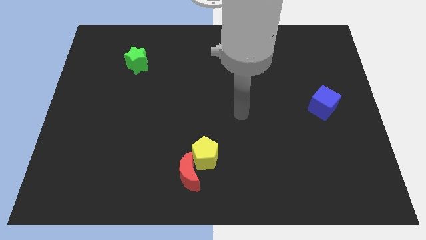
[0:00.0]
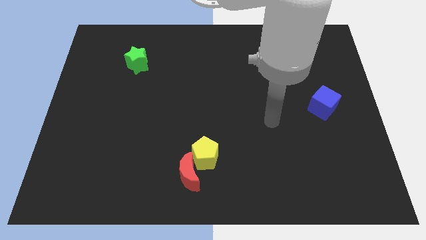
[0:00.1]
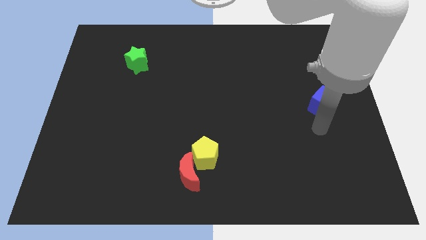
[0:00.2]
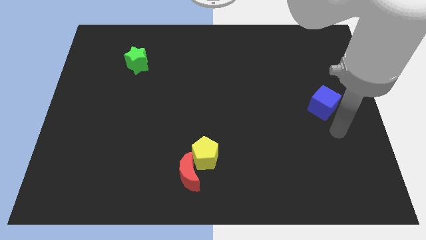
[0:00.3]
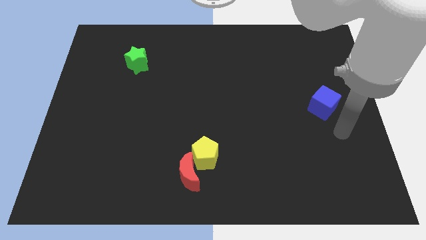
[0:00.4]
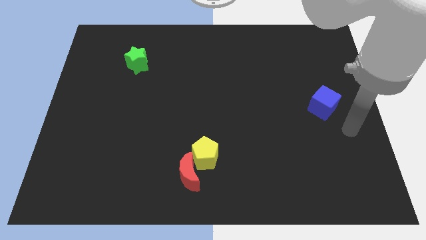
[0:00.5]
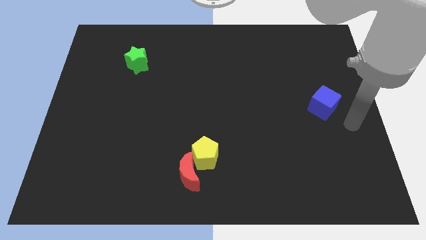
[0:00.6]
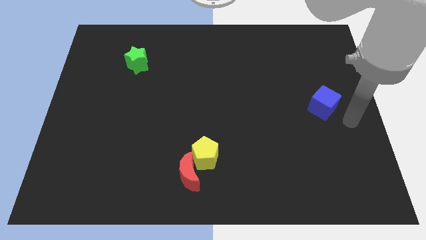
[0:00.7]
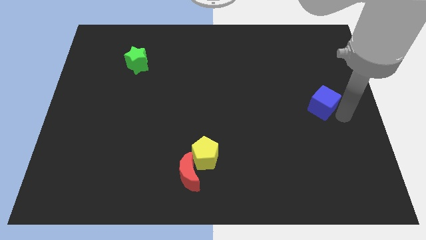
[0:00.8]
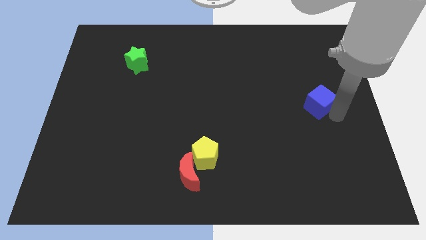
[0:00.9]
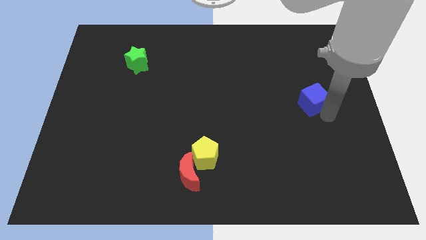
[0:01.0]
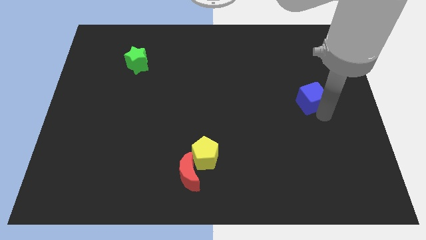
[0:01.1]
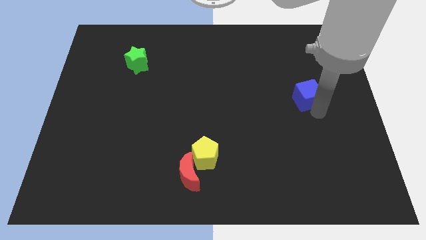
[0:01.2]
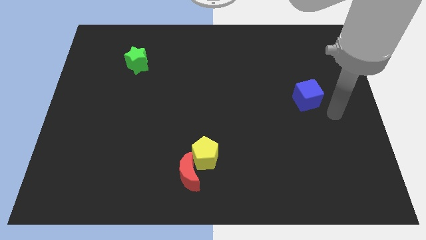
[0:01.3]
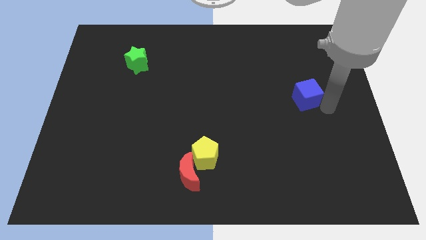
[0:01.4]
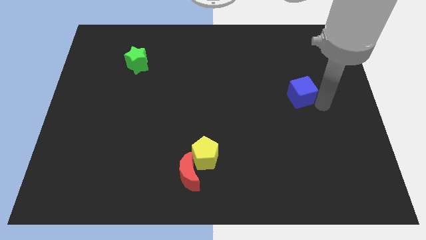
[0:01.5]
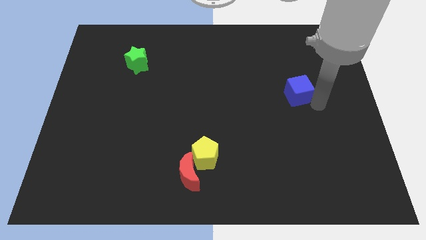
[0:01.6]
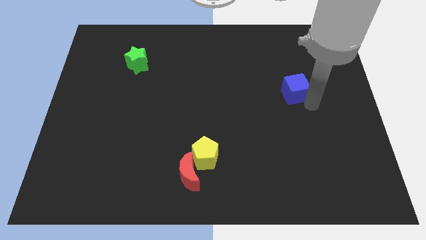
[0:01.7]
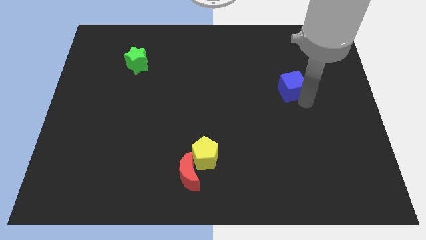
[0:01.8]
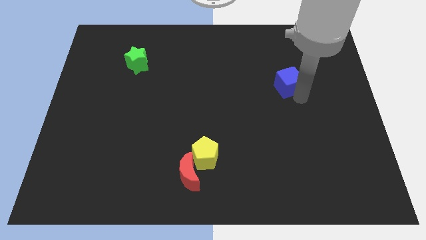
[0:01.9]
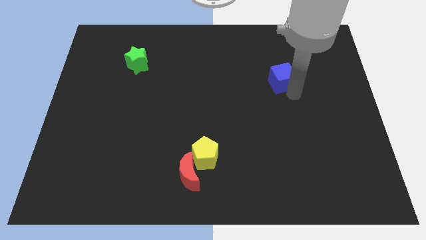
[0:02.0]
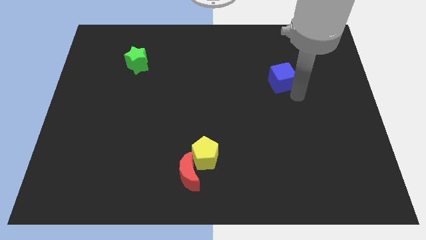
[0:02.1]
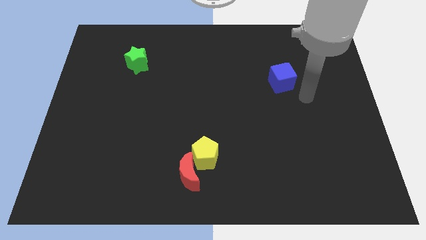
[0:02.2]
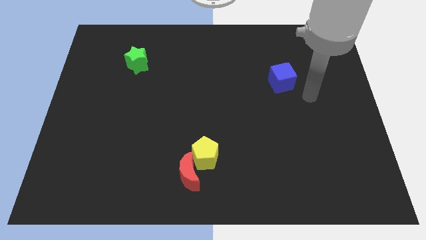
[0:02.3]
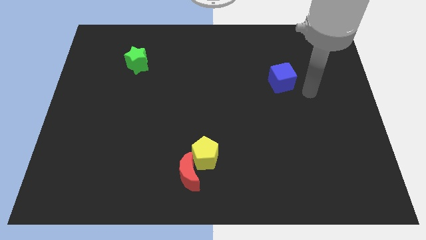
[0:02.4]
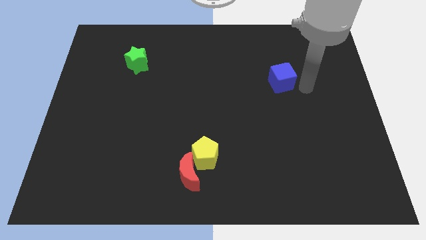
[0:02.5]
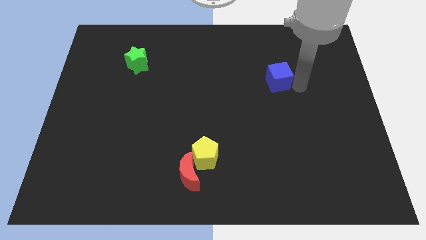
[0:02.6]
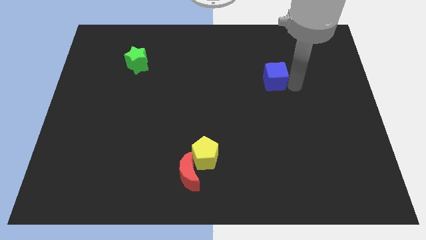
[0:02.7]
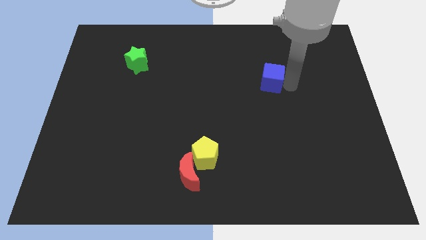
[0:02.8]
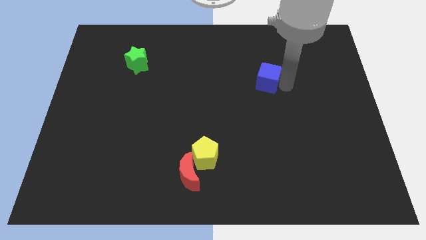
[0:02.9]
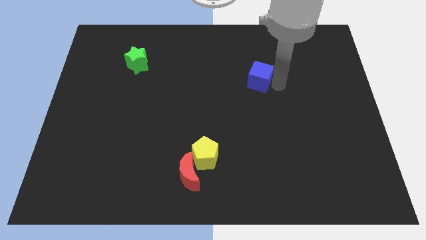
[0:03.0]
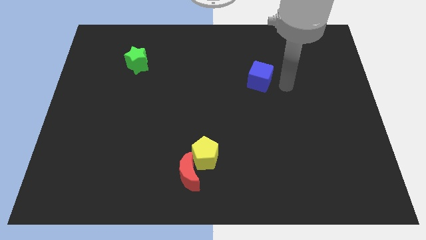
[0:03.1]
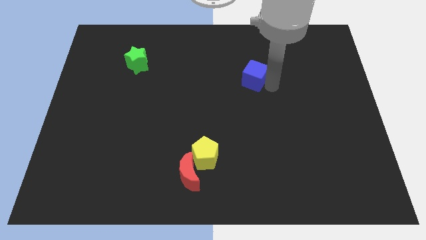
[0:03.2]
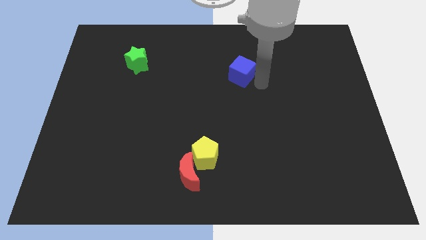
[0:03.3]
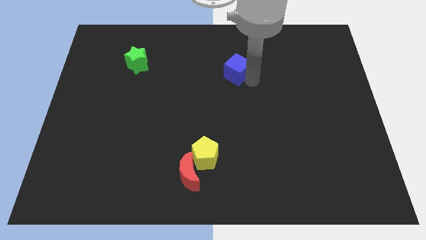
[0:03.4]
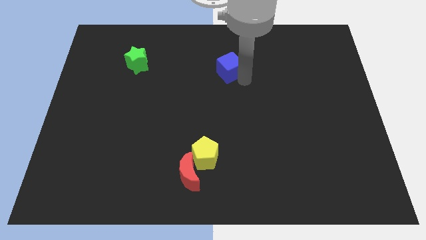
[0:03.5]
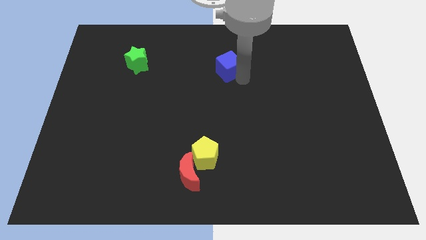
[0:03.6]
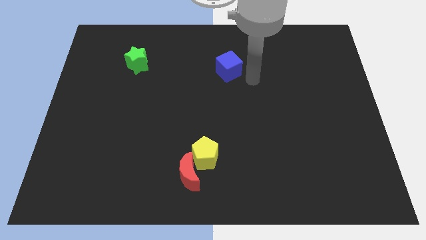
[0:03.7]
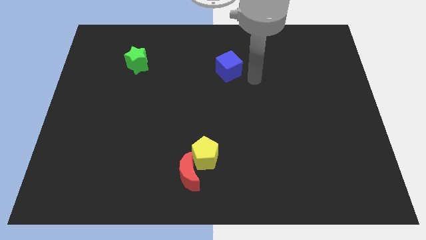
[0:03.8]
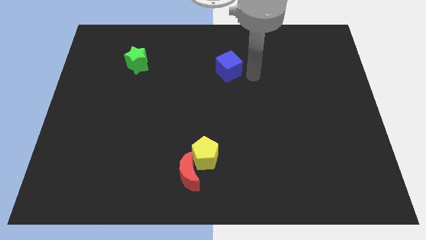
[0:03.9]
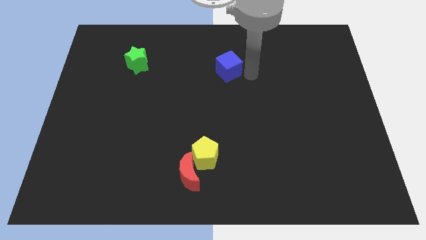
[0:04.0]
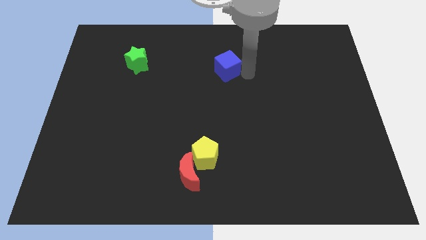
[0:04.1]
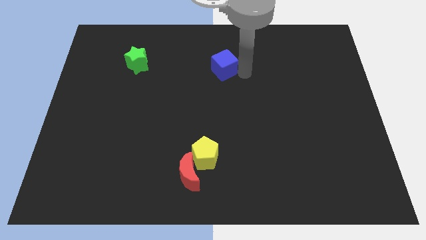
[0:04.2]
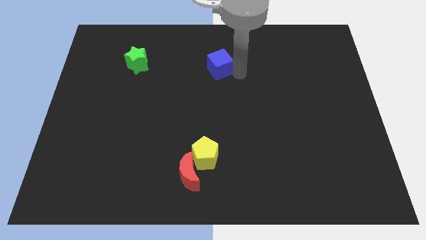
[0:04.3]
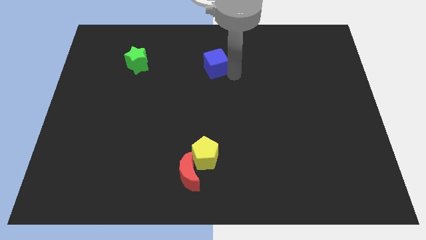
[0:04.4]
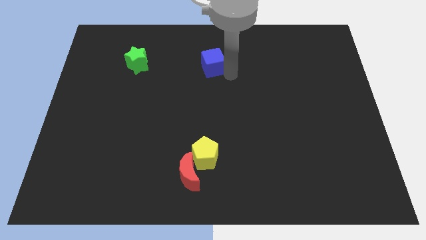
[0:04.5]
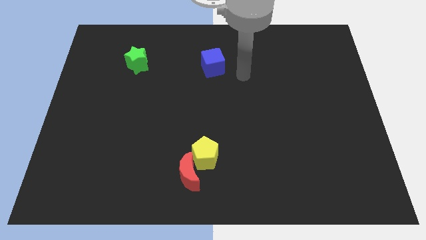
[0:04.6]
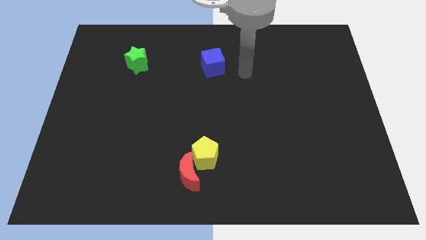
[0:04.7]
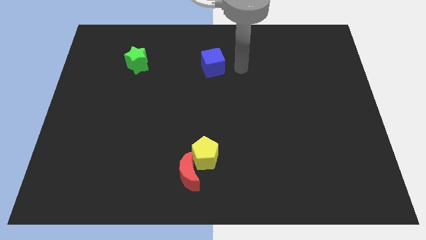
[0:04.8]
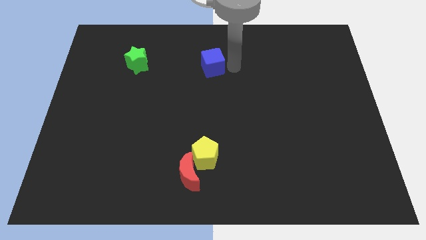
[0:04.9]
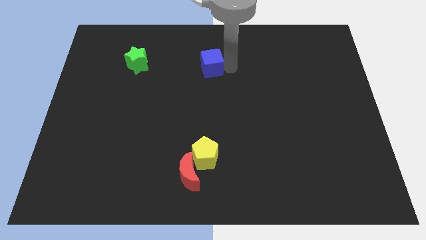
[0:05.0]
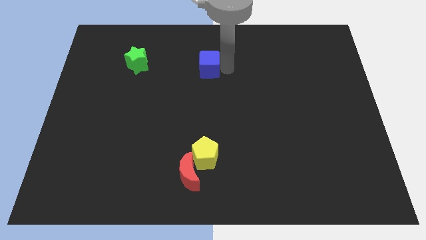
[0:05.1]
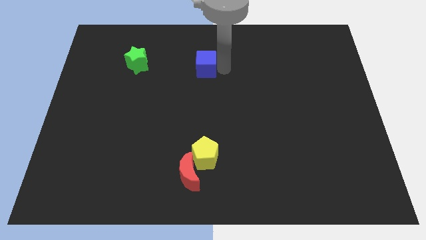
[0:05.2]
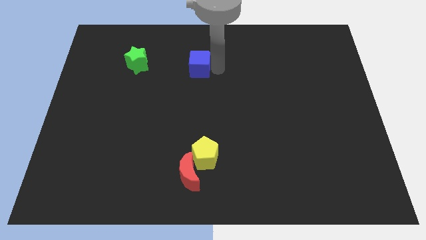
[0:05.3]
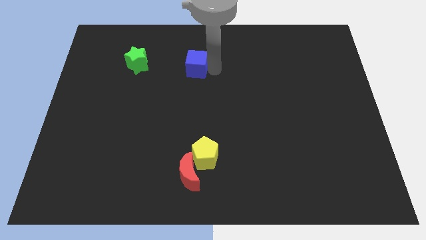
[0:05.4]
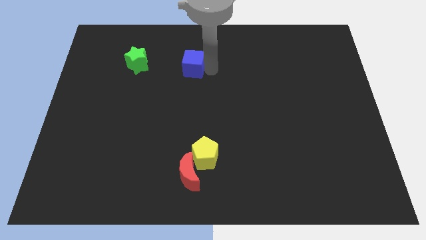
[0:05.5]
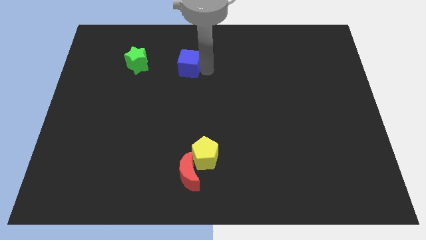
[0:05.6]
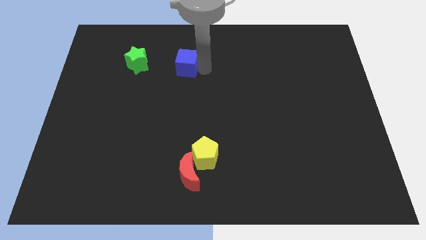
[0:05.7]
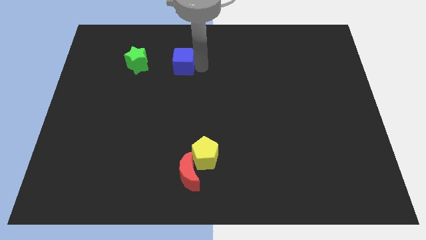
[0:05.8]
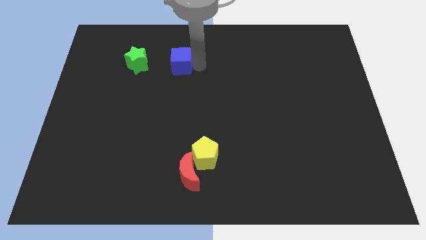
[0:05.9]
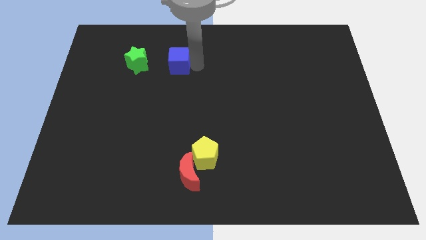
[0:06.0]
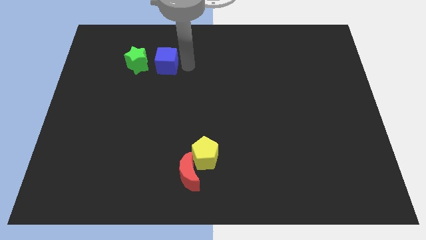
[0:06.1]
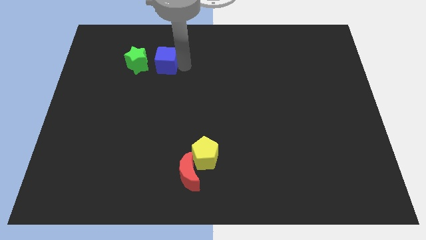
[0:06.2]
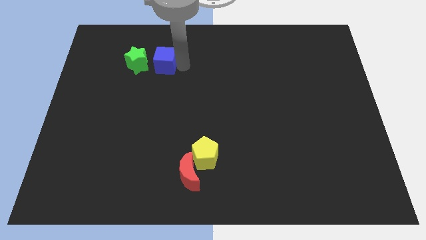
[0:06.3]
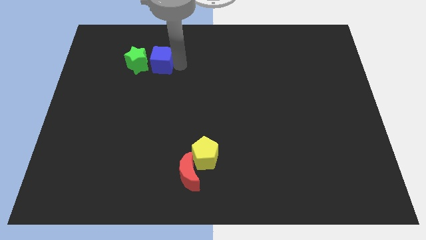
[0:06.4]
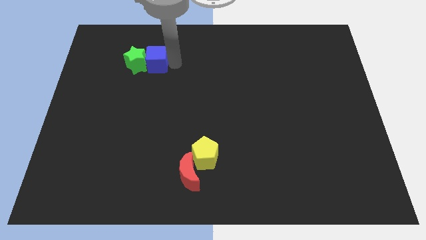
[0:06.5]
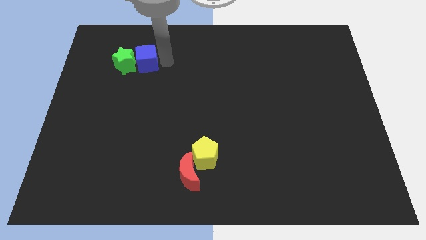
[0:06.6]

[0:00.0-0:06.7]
push the cube close to the green block

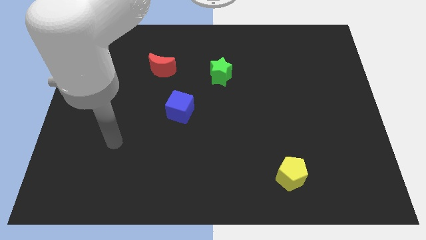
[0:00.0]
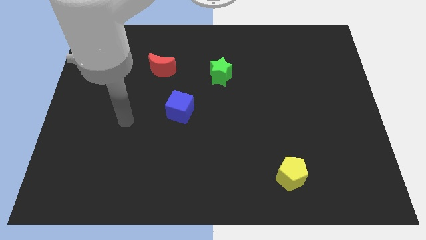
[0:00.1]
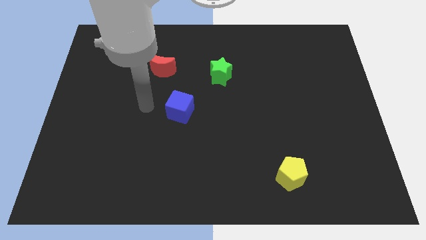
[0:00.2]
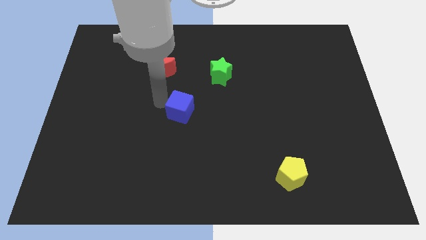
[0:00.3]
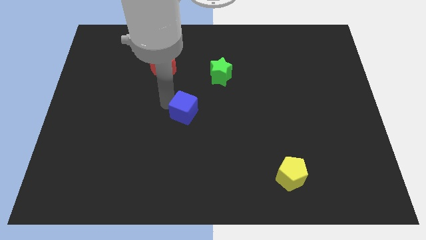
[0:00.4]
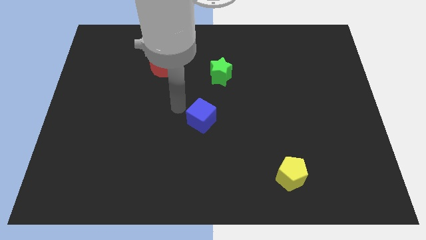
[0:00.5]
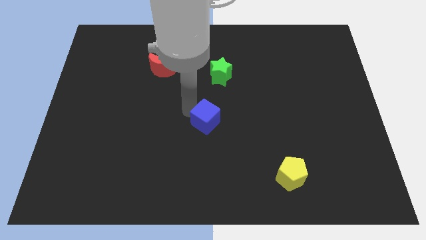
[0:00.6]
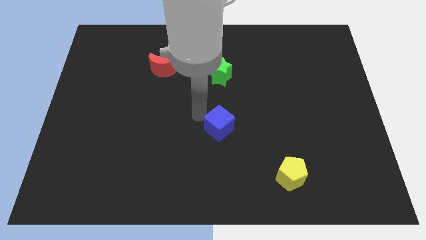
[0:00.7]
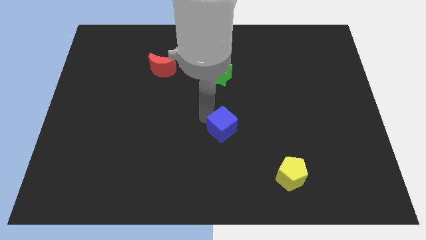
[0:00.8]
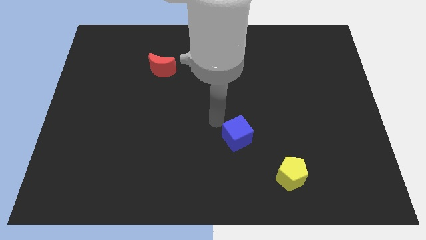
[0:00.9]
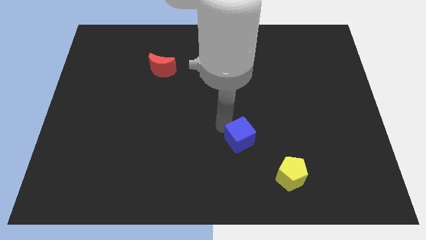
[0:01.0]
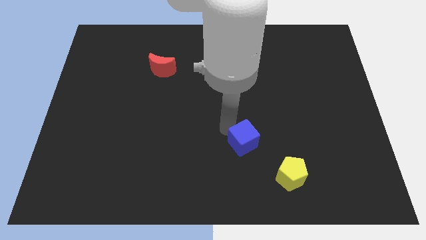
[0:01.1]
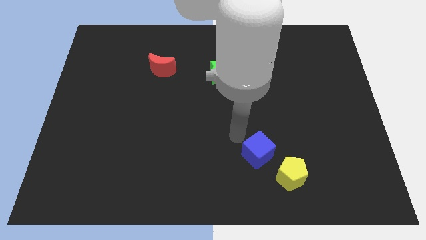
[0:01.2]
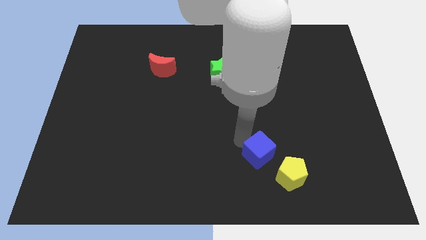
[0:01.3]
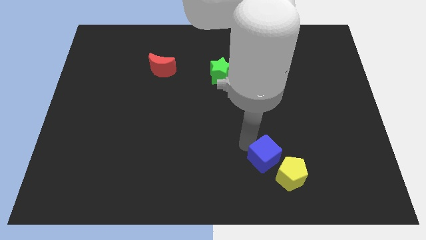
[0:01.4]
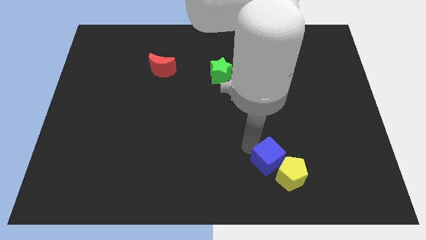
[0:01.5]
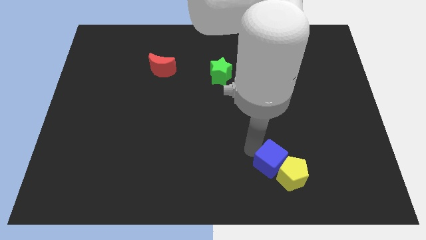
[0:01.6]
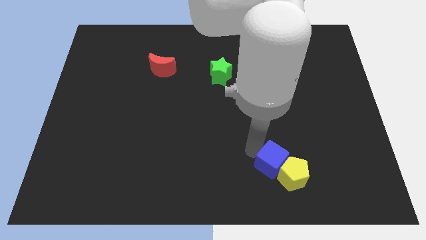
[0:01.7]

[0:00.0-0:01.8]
move the blue cube to the pentagon
